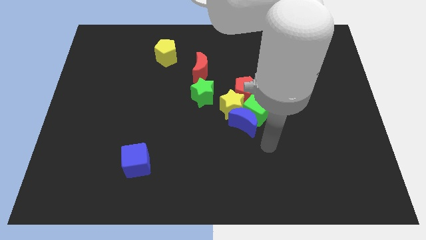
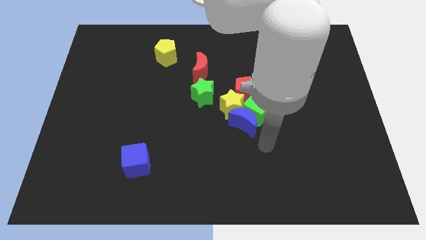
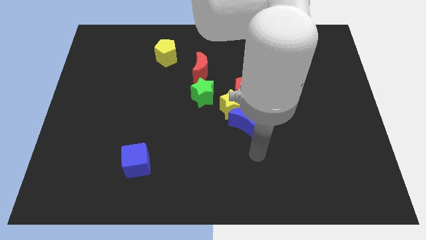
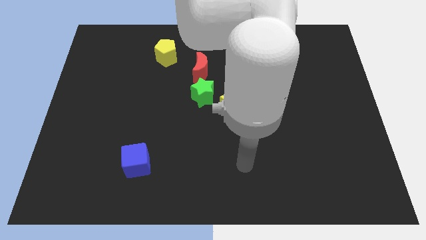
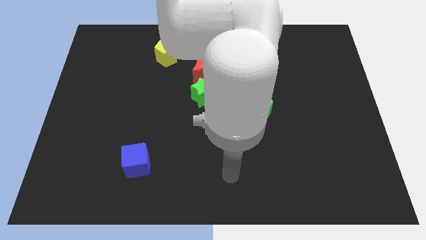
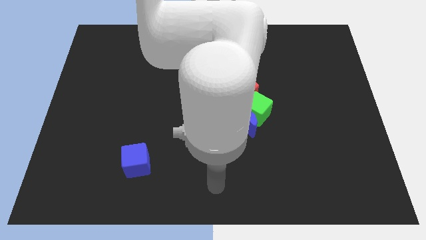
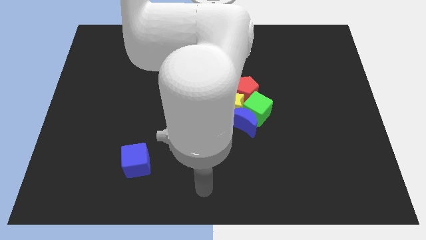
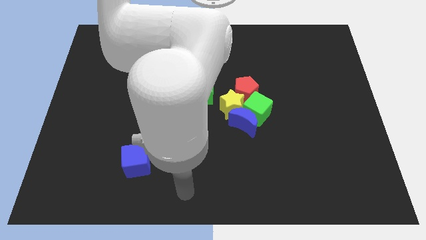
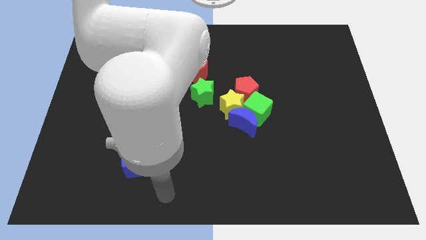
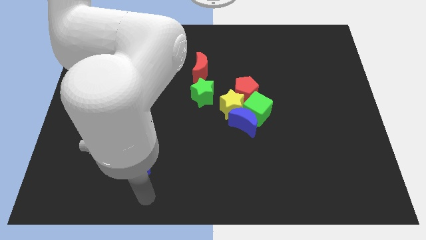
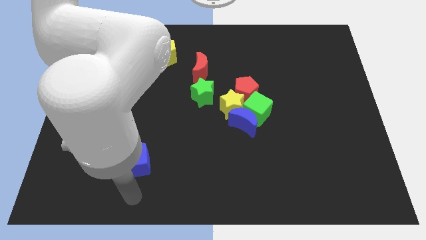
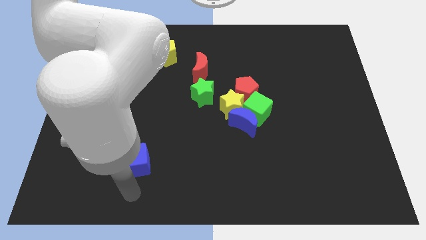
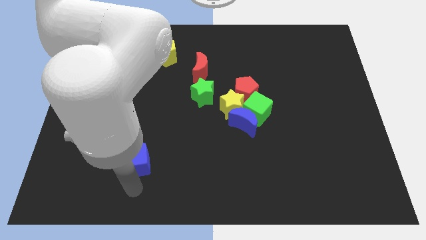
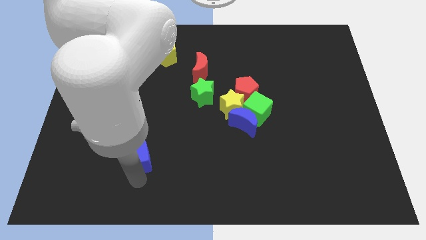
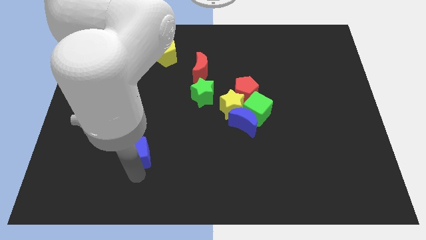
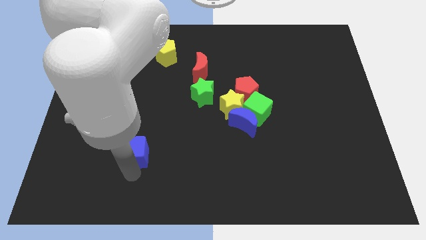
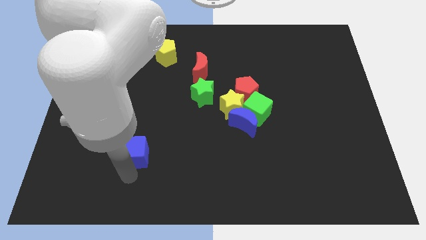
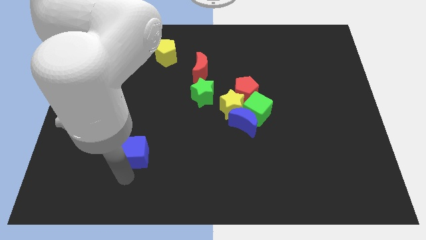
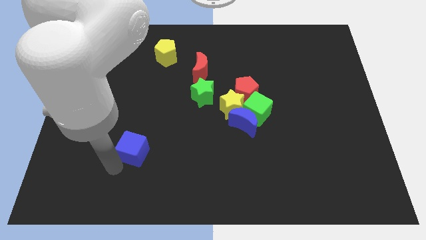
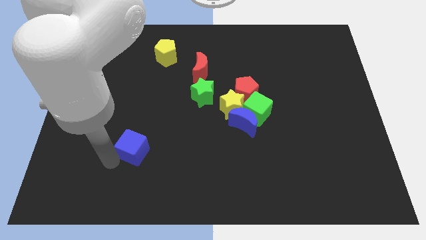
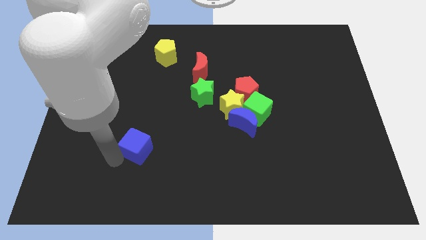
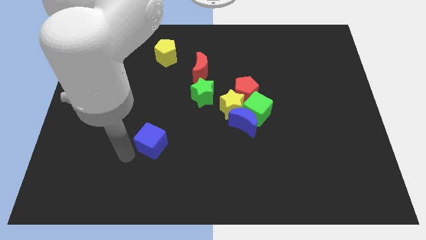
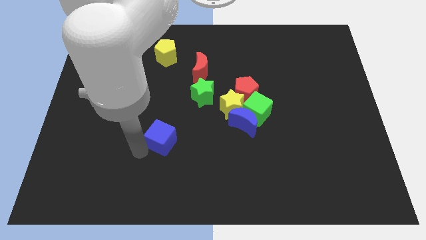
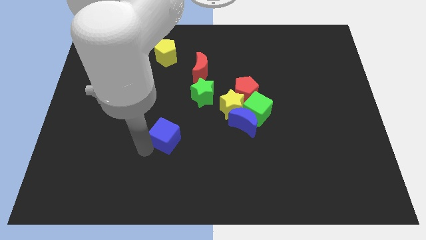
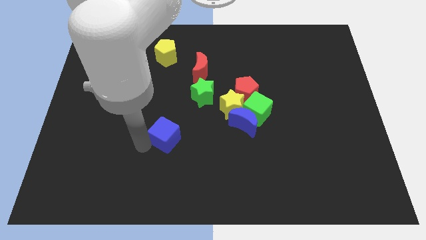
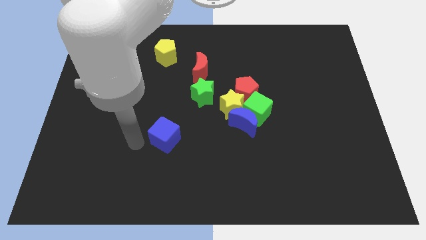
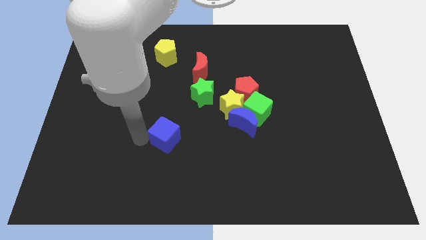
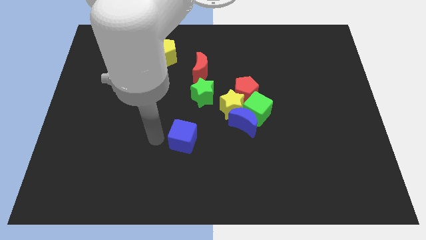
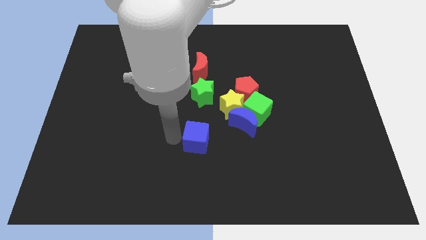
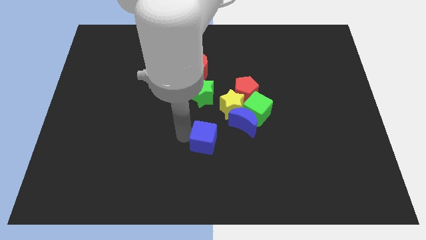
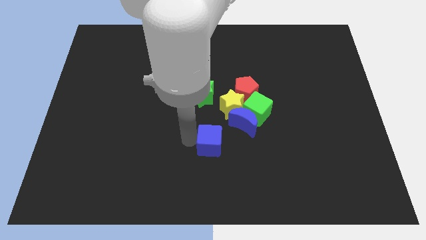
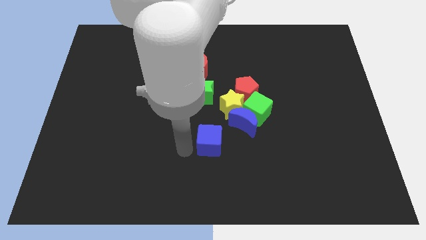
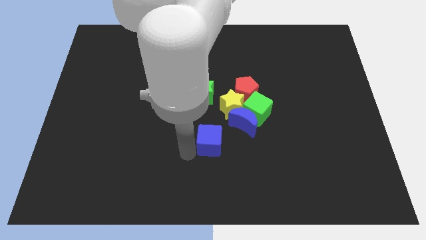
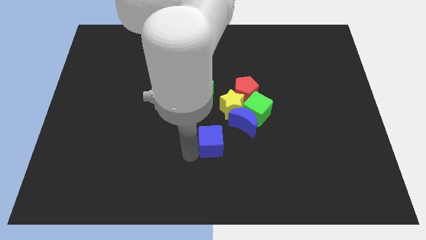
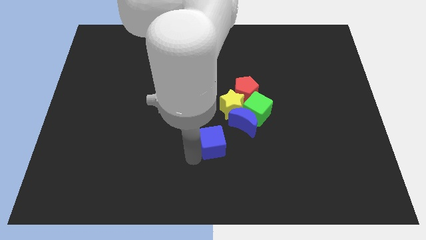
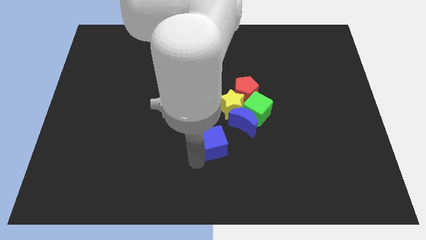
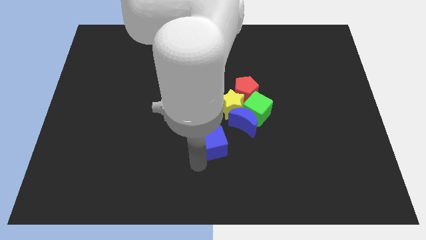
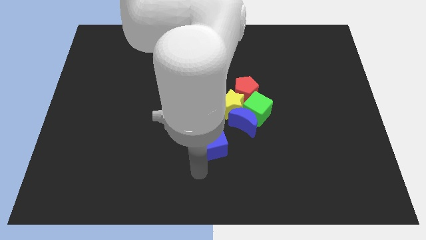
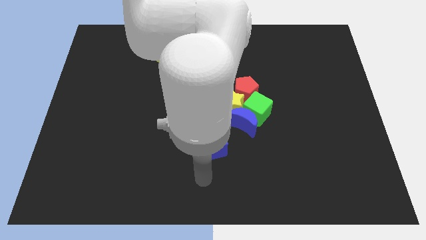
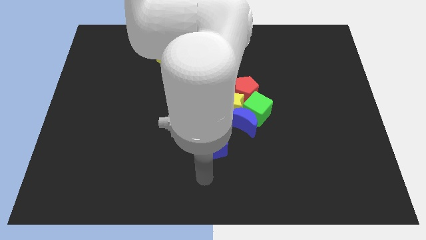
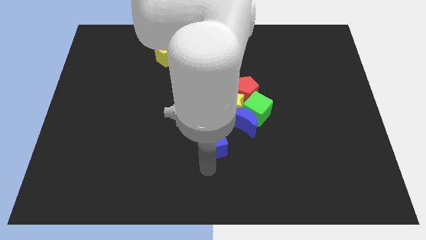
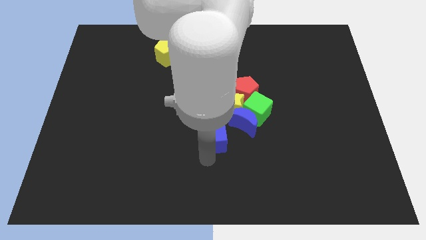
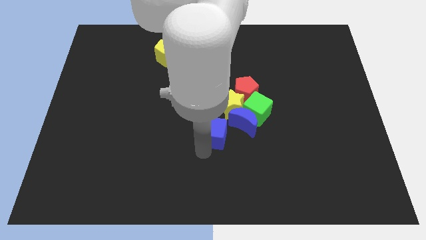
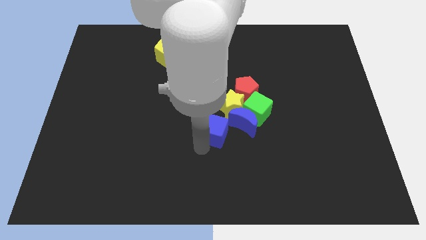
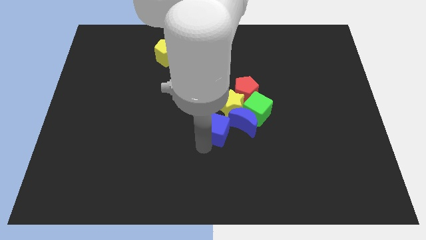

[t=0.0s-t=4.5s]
push the blue cube close to the blue moon

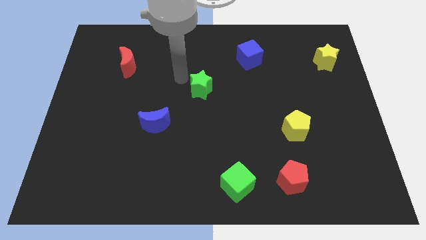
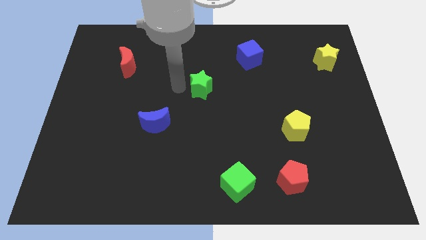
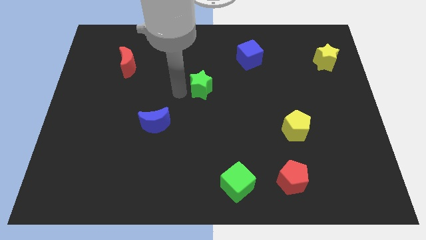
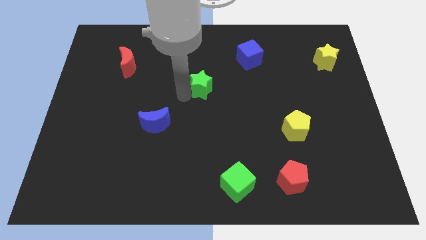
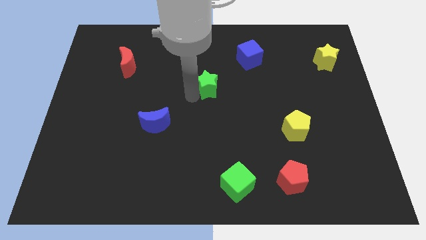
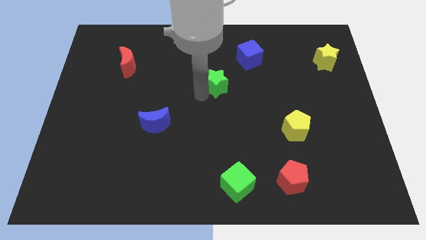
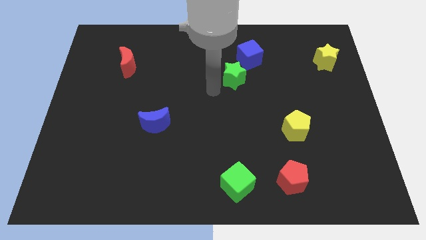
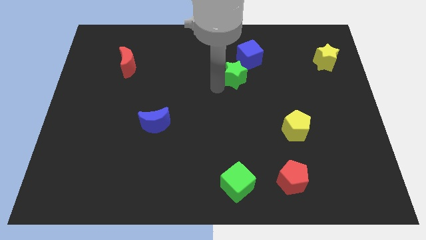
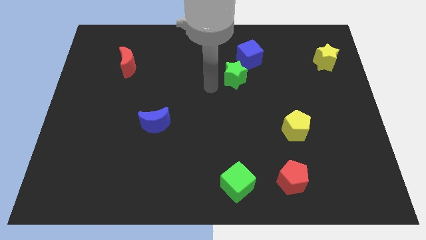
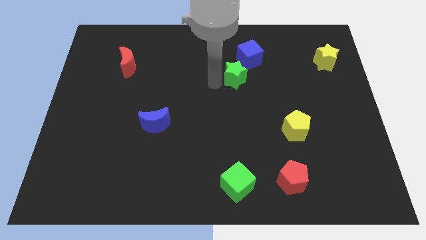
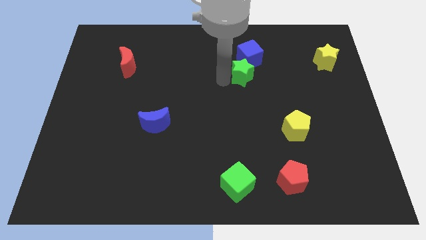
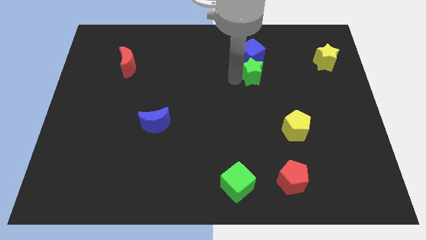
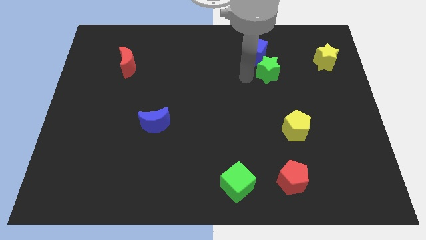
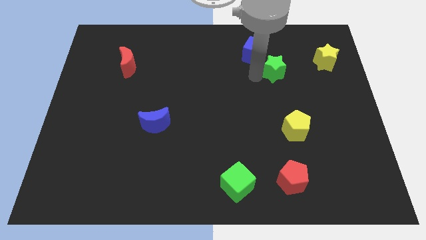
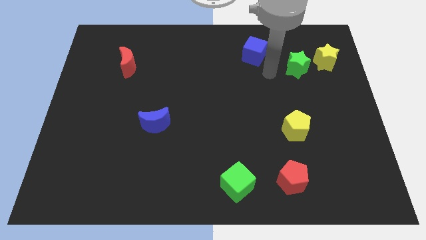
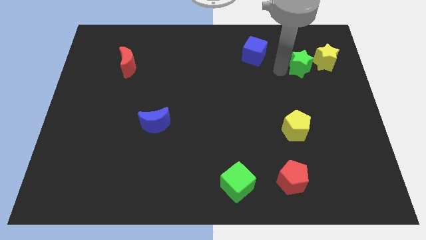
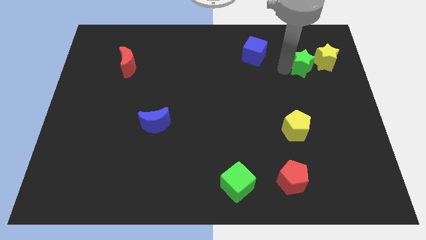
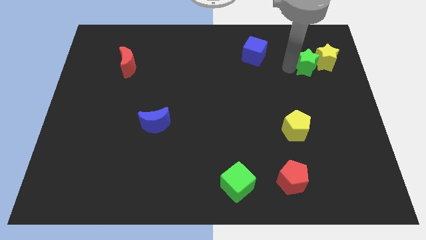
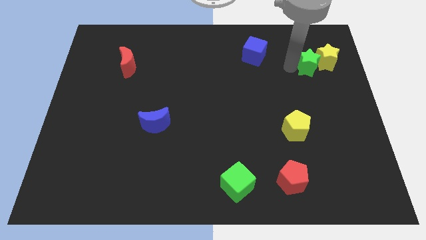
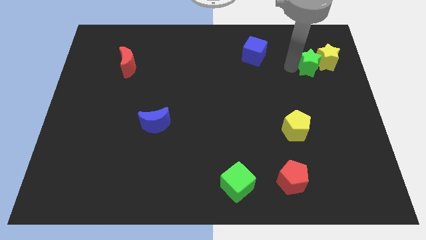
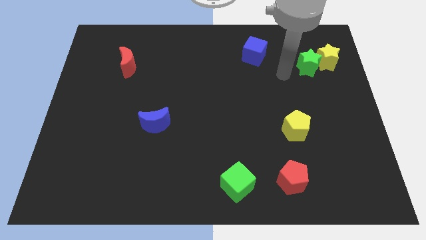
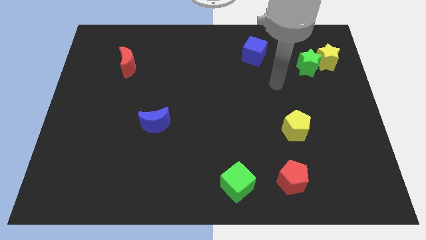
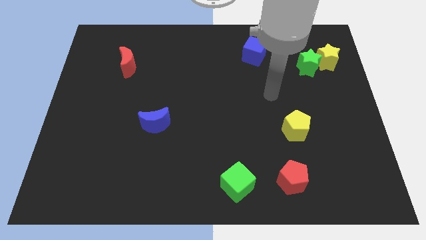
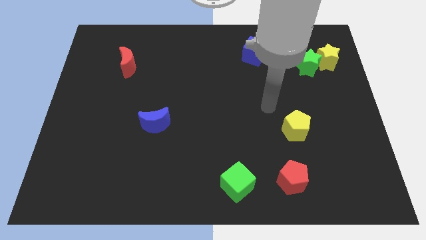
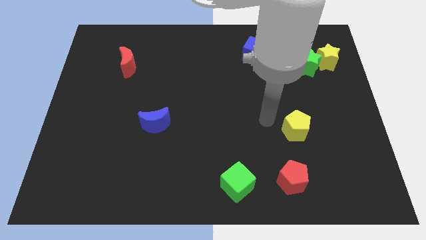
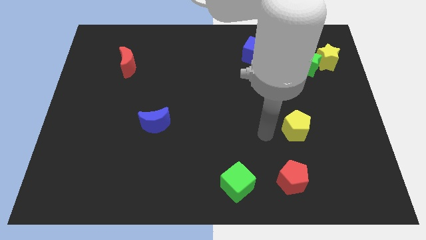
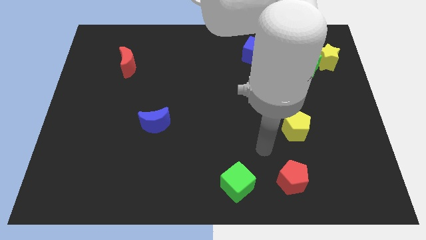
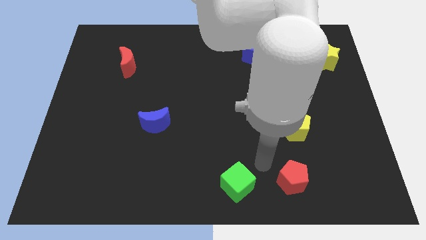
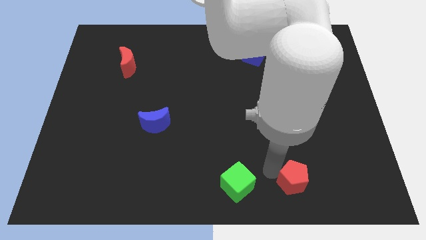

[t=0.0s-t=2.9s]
push the green star towards the yellow star

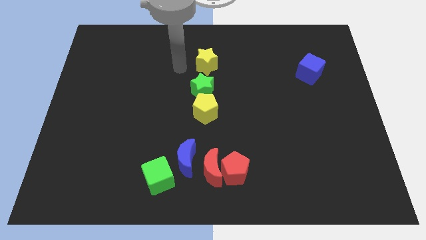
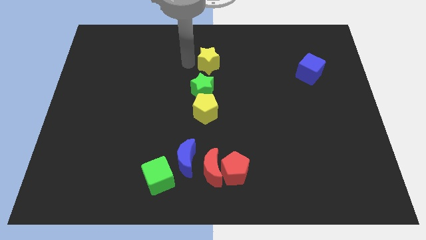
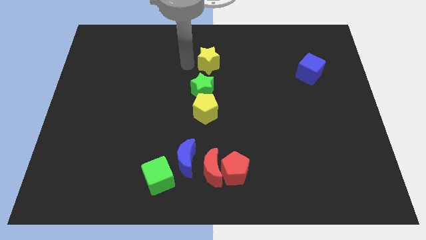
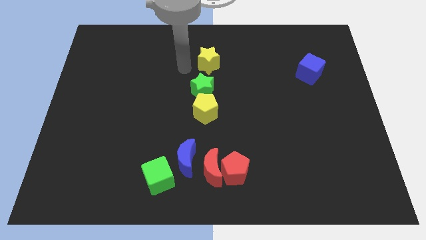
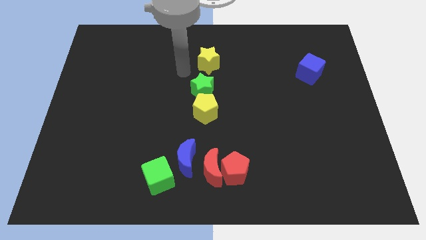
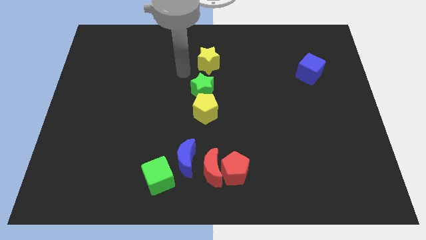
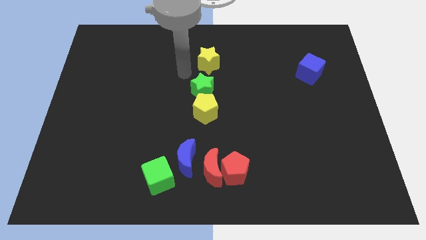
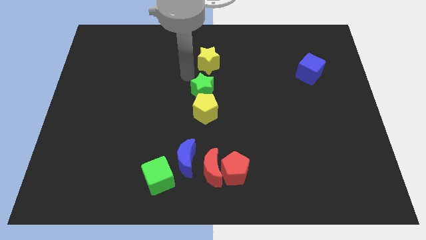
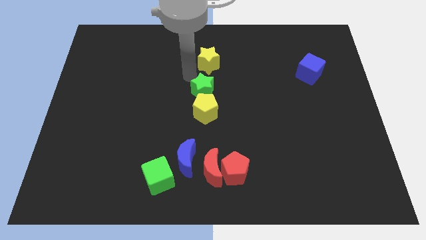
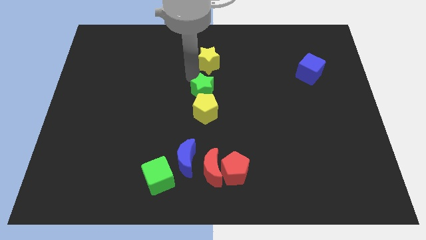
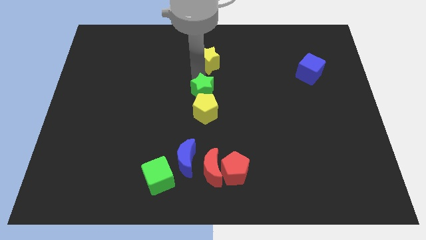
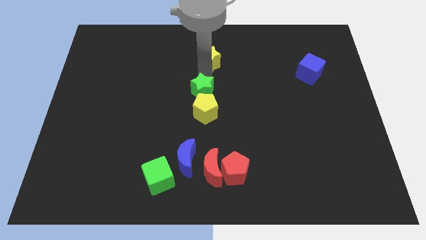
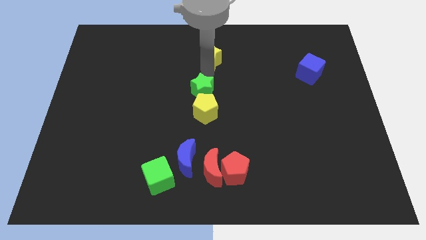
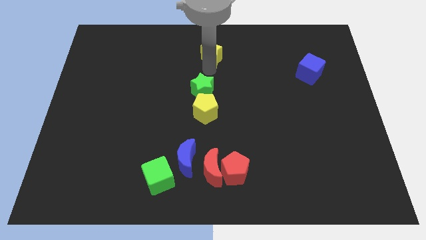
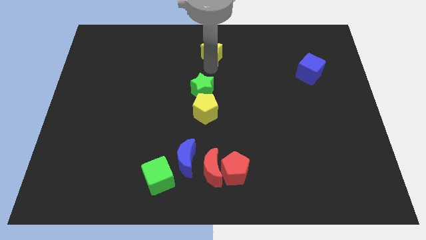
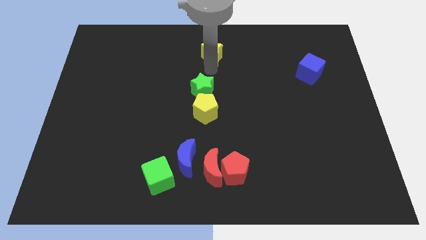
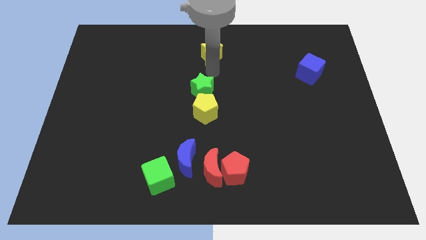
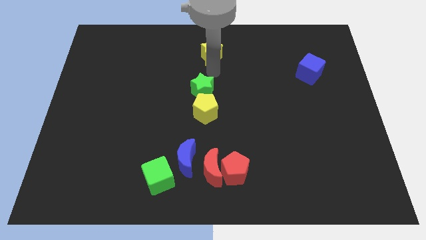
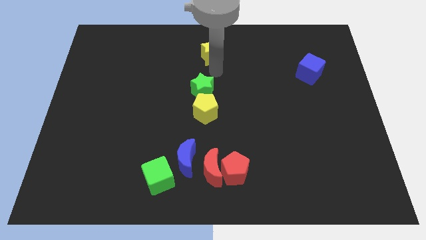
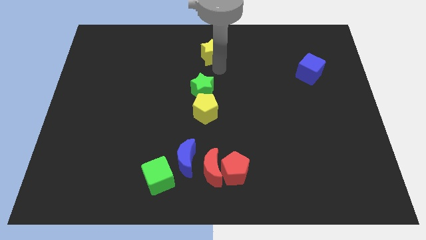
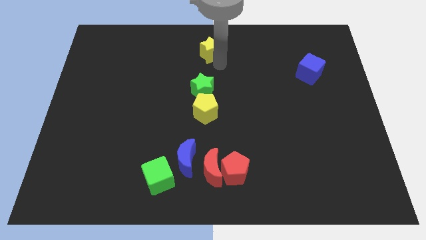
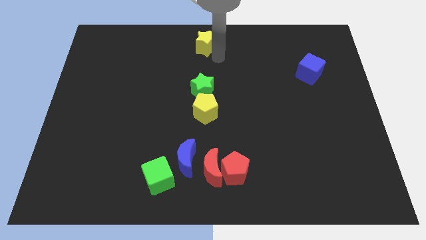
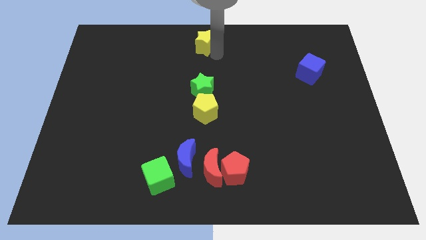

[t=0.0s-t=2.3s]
push the yellow pentagon to the top
